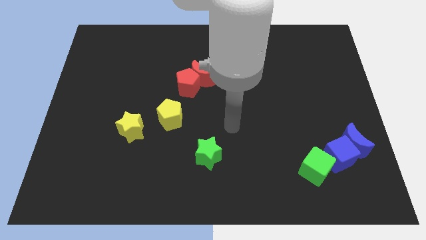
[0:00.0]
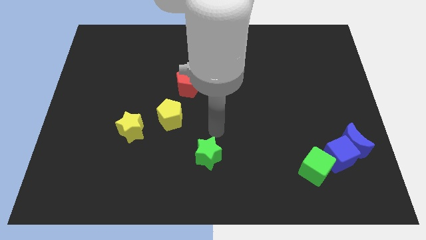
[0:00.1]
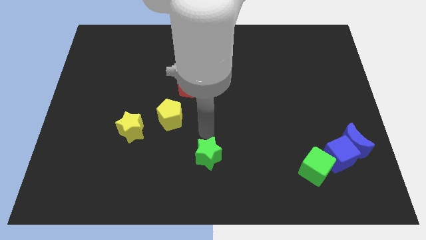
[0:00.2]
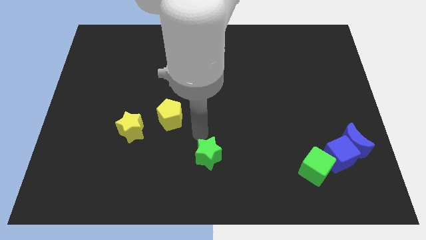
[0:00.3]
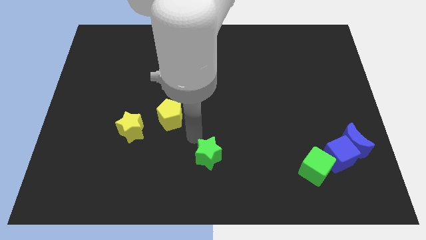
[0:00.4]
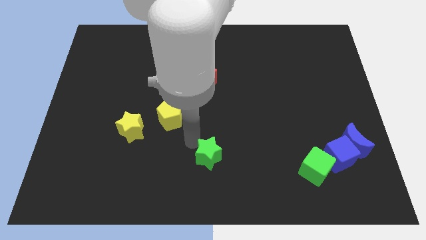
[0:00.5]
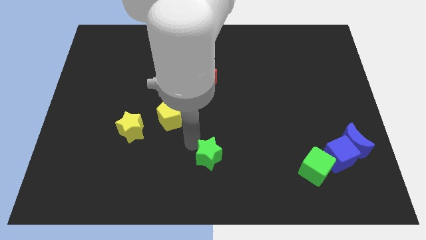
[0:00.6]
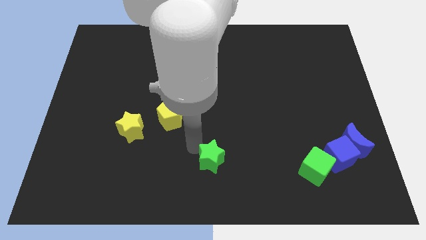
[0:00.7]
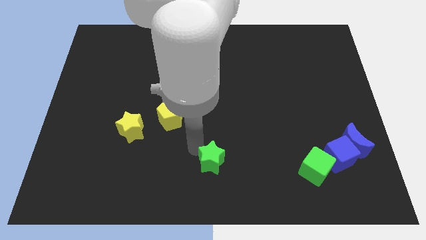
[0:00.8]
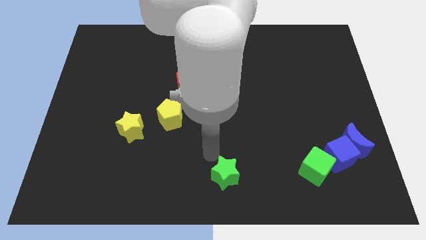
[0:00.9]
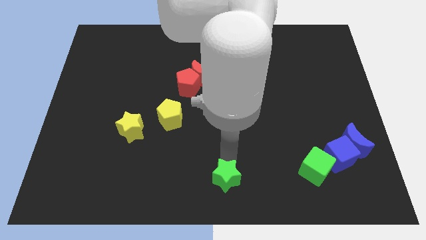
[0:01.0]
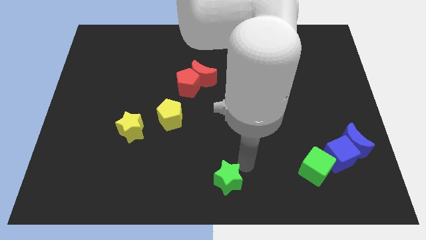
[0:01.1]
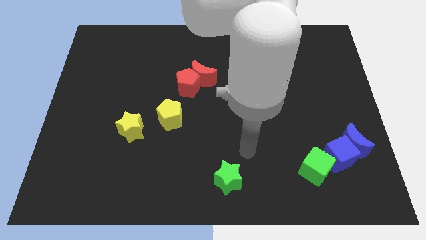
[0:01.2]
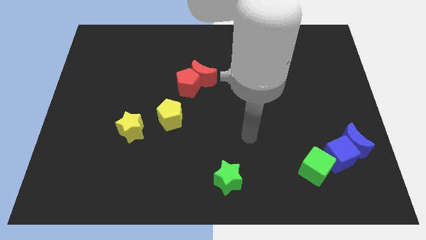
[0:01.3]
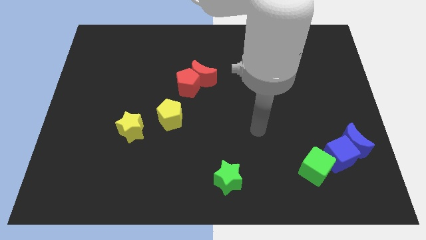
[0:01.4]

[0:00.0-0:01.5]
push the green star bottom center

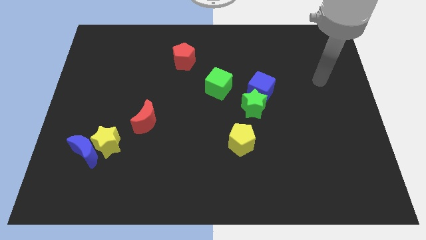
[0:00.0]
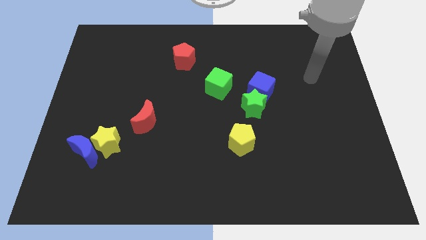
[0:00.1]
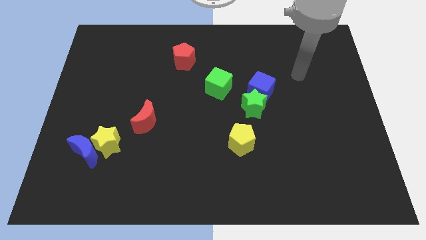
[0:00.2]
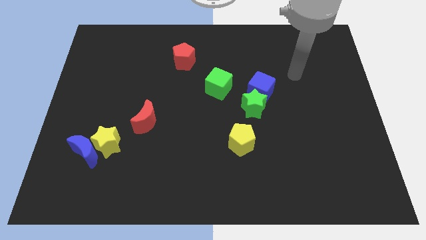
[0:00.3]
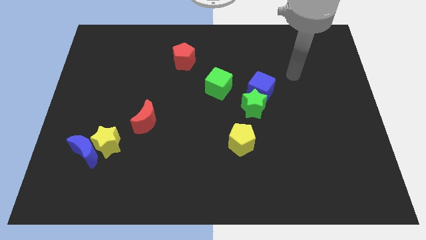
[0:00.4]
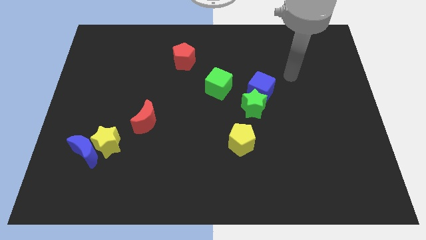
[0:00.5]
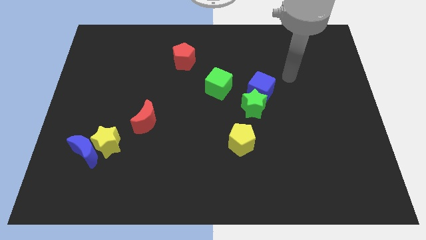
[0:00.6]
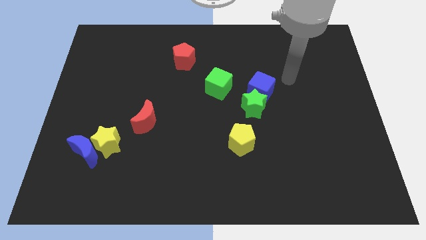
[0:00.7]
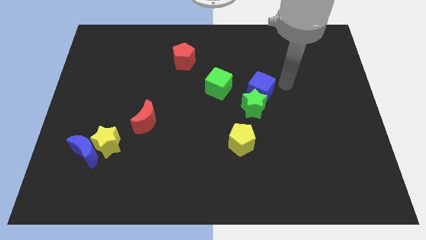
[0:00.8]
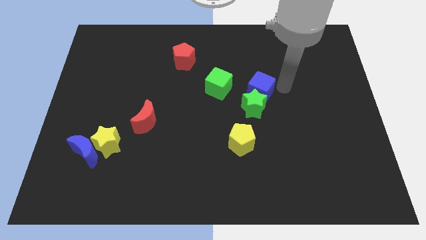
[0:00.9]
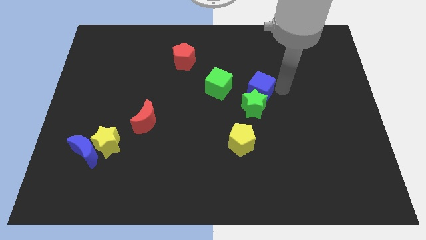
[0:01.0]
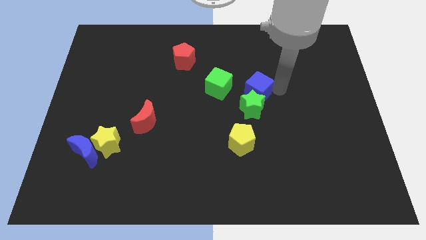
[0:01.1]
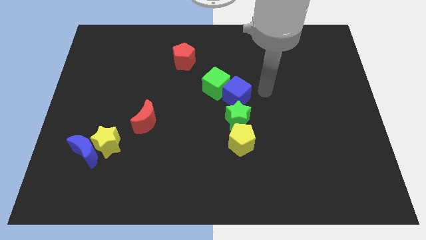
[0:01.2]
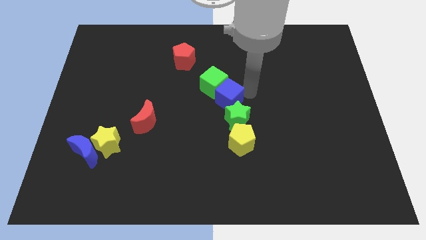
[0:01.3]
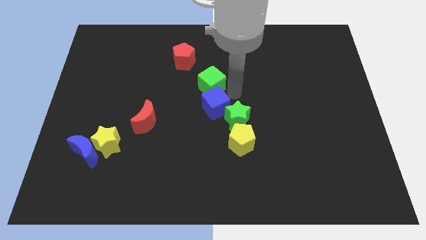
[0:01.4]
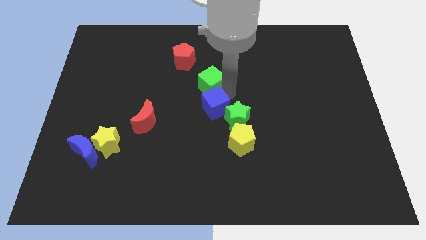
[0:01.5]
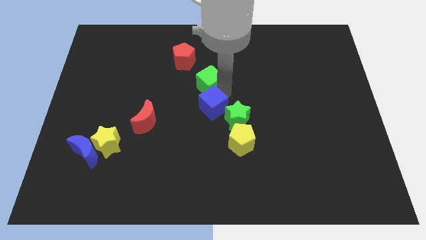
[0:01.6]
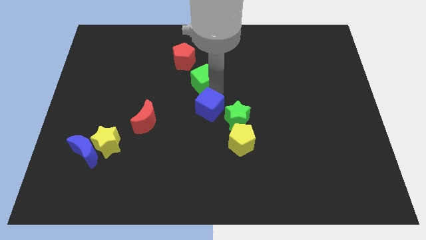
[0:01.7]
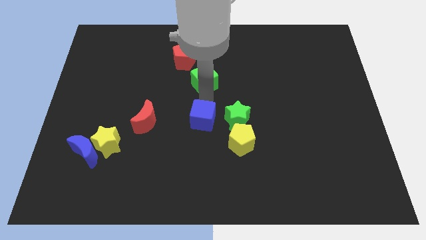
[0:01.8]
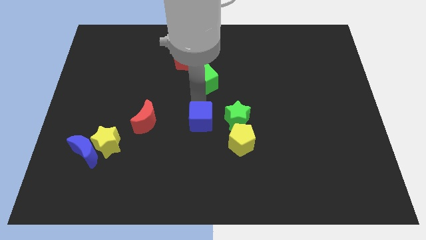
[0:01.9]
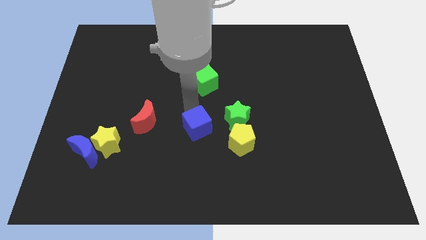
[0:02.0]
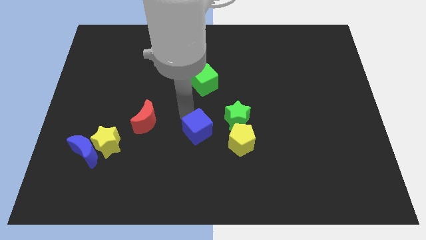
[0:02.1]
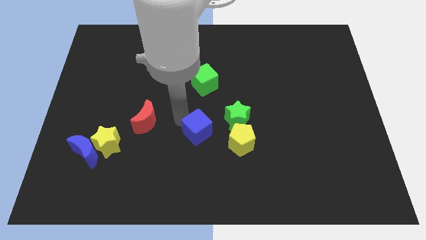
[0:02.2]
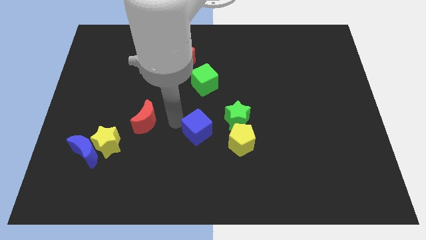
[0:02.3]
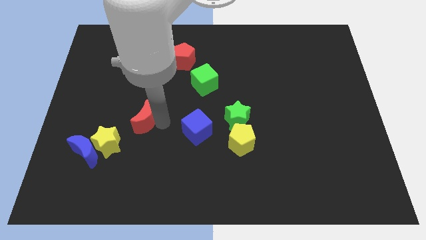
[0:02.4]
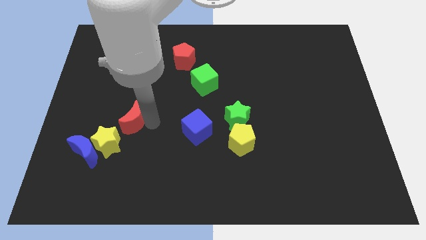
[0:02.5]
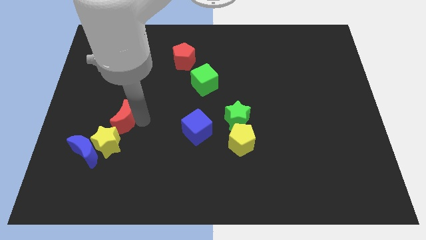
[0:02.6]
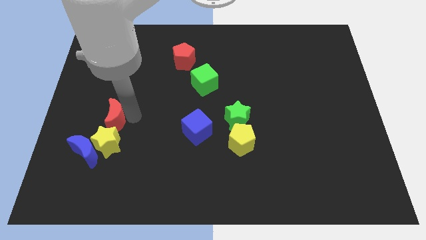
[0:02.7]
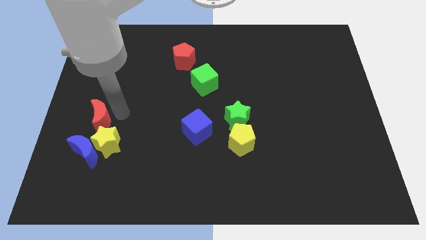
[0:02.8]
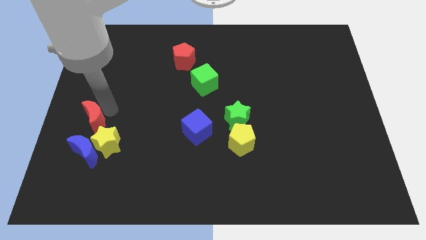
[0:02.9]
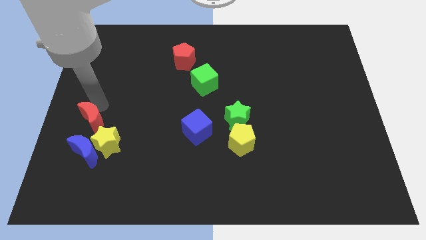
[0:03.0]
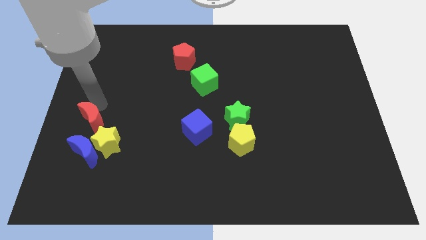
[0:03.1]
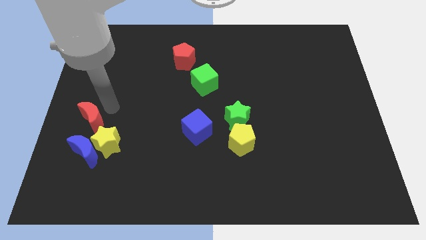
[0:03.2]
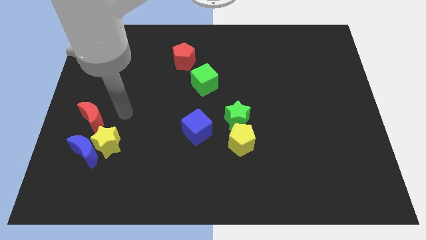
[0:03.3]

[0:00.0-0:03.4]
push the blue cube vertically at the bottom of the green cube

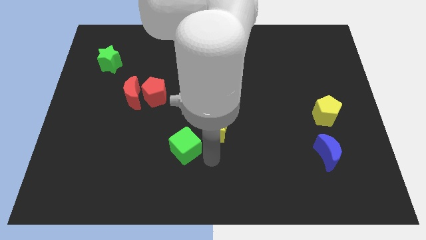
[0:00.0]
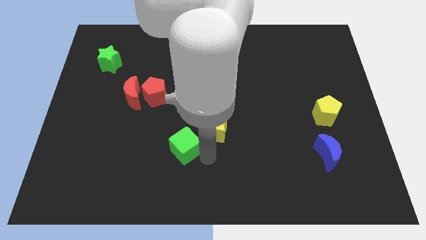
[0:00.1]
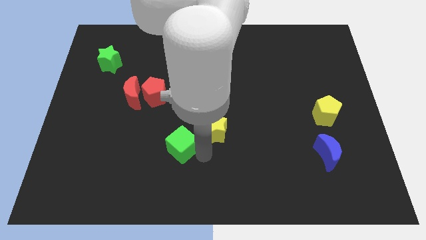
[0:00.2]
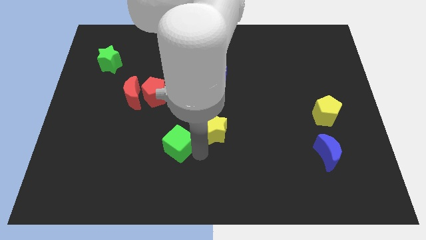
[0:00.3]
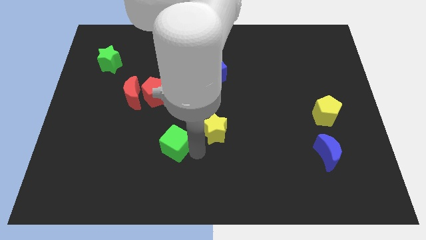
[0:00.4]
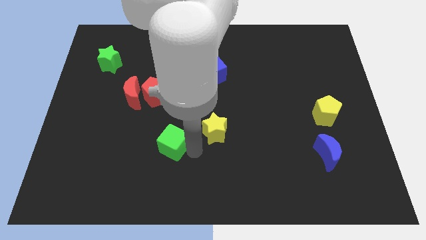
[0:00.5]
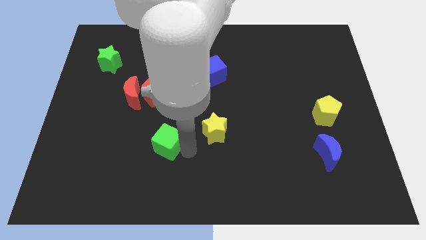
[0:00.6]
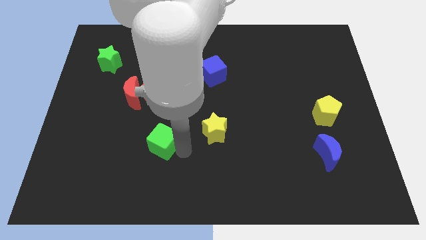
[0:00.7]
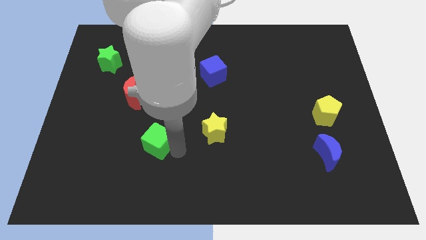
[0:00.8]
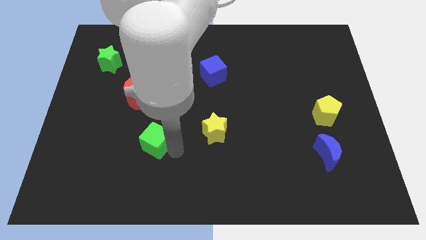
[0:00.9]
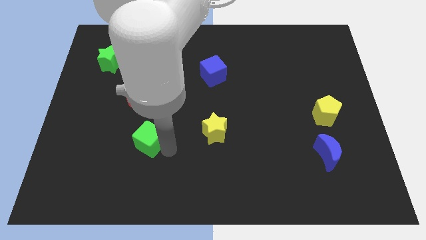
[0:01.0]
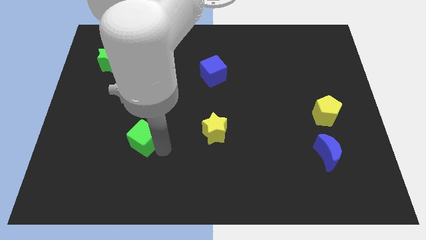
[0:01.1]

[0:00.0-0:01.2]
slide the green cube to the left center

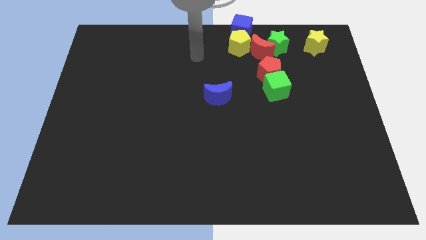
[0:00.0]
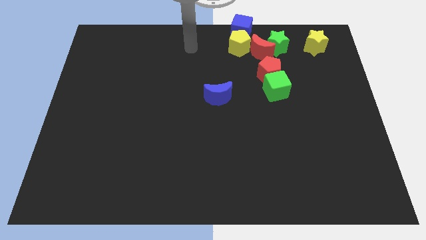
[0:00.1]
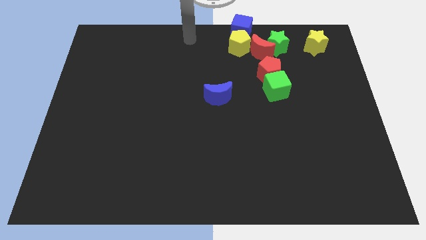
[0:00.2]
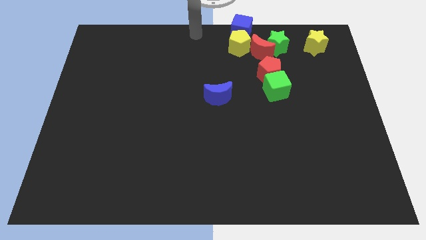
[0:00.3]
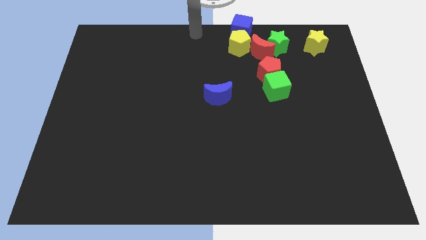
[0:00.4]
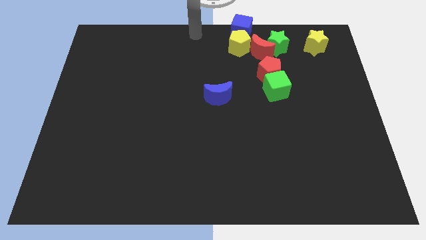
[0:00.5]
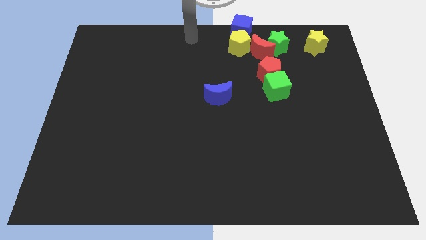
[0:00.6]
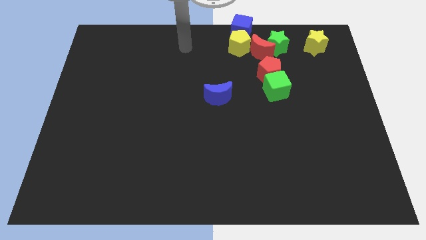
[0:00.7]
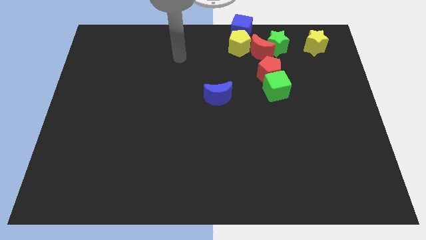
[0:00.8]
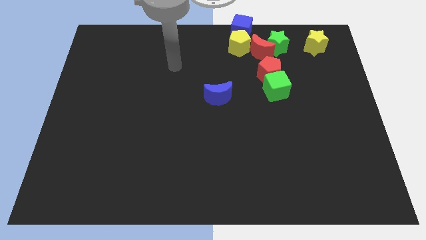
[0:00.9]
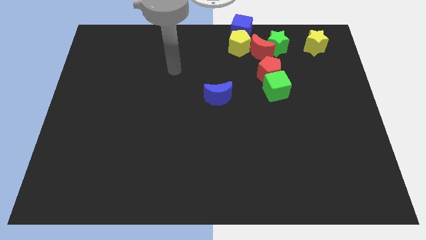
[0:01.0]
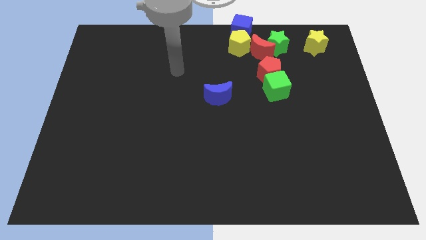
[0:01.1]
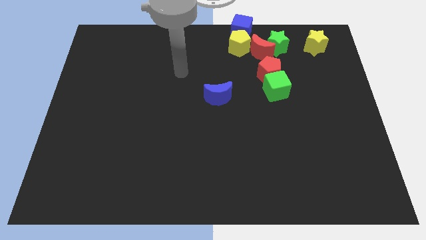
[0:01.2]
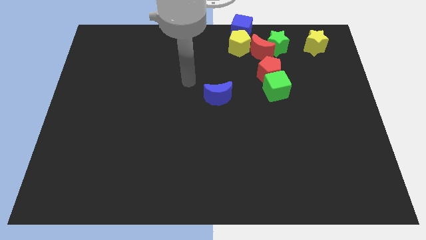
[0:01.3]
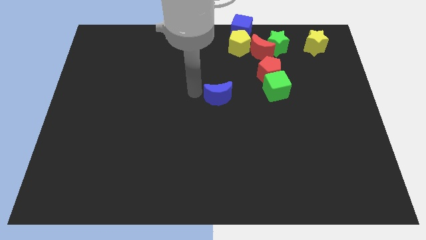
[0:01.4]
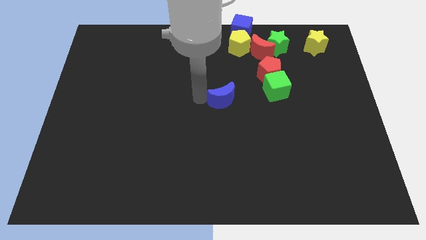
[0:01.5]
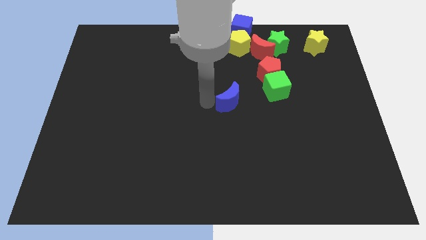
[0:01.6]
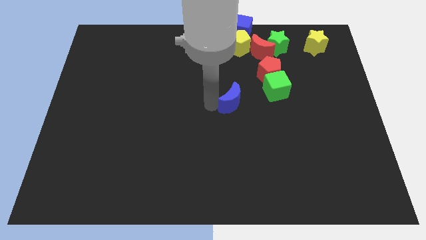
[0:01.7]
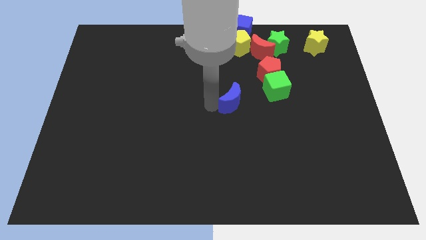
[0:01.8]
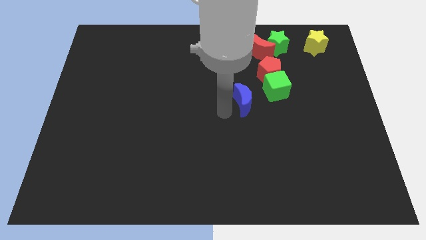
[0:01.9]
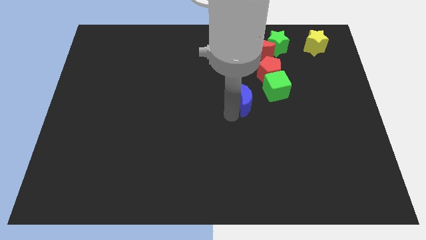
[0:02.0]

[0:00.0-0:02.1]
move the blue crescent close to green cube

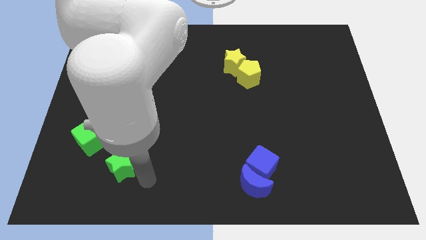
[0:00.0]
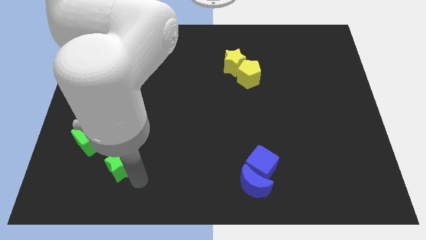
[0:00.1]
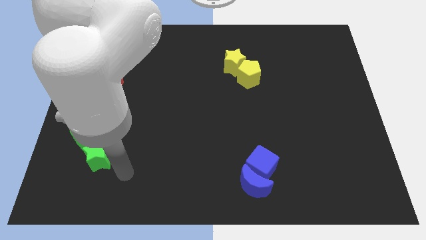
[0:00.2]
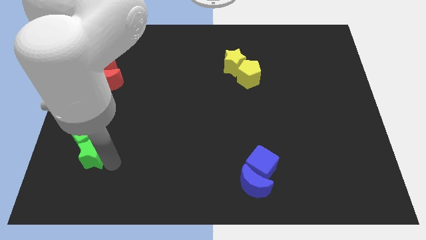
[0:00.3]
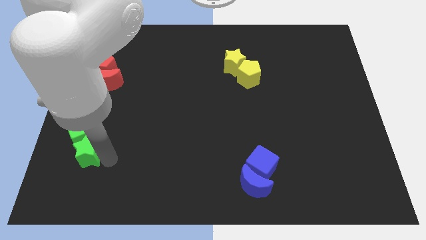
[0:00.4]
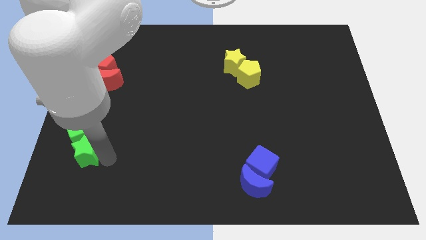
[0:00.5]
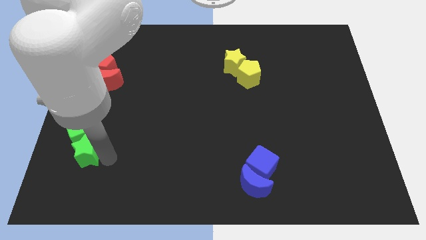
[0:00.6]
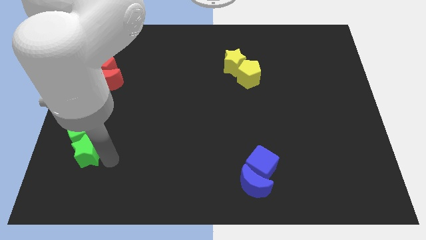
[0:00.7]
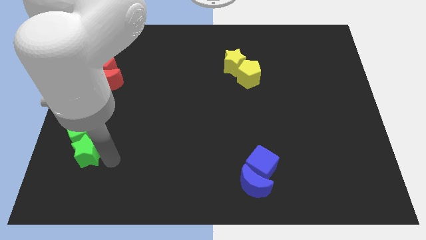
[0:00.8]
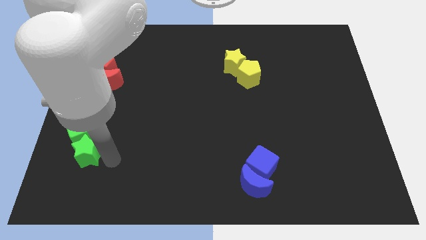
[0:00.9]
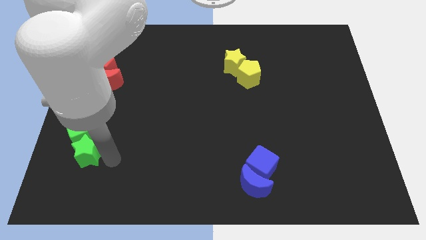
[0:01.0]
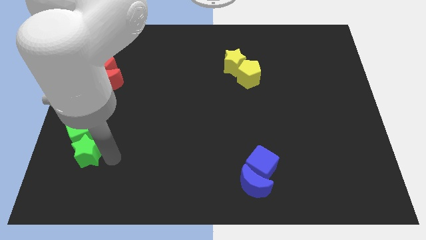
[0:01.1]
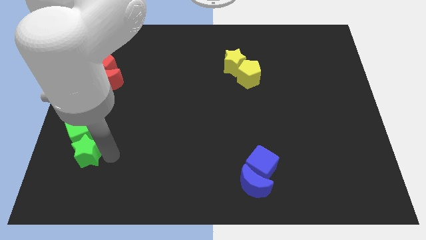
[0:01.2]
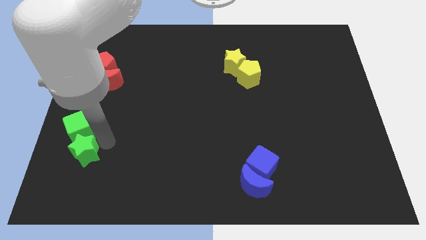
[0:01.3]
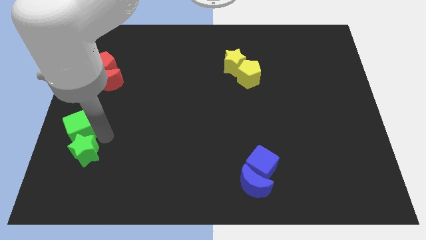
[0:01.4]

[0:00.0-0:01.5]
push the green star into the green cube
